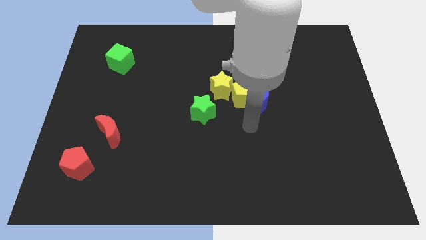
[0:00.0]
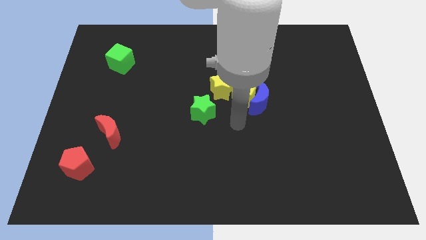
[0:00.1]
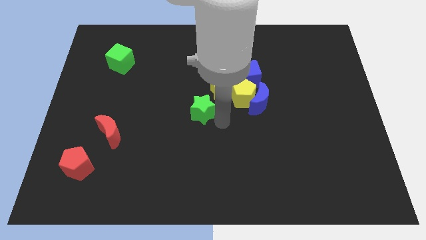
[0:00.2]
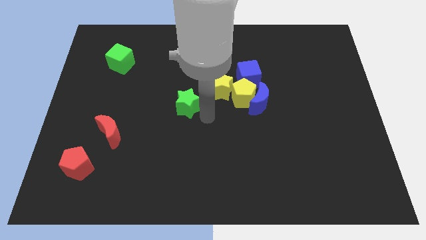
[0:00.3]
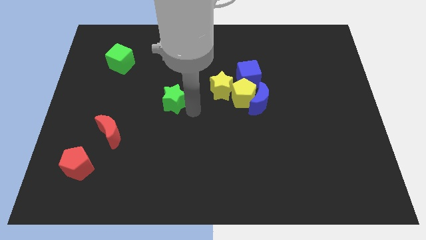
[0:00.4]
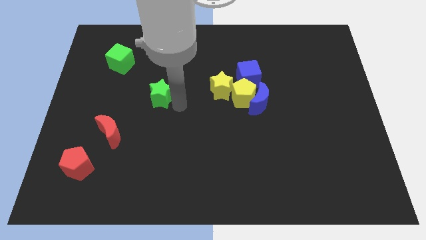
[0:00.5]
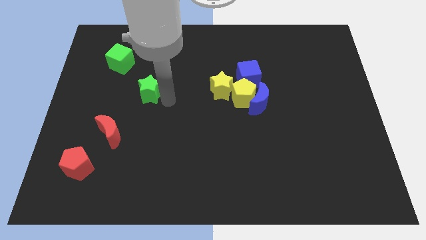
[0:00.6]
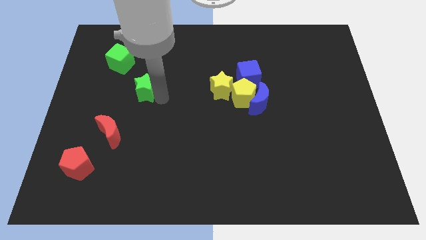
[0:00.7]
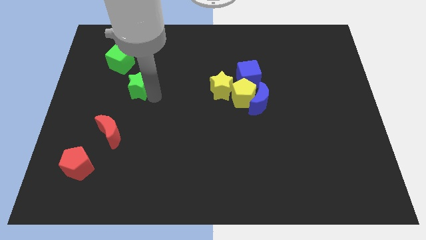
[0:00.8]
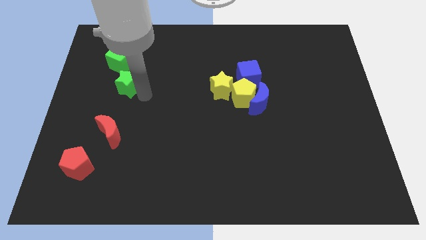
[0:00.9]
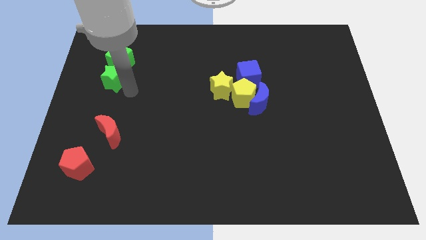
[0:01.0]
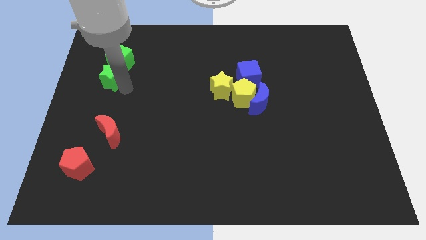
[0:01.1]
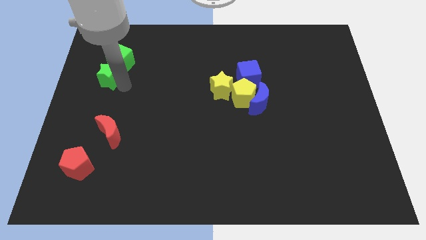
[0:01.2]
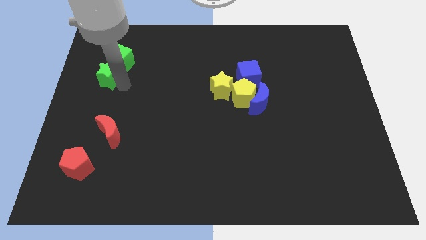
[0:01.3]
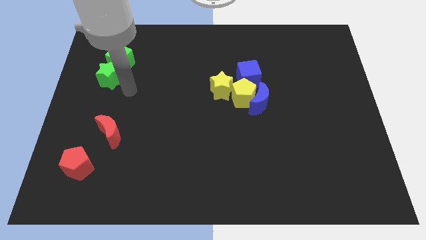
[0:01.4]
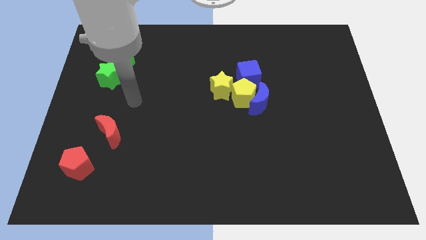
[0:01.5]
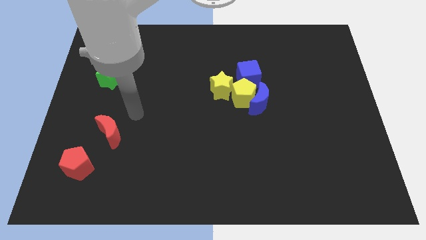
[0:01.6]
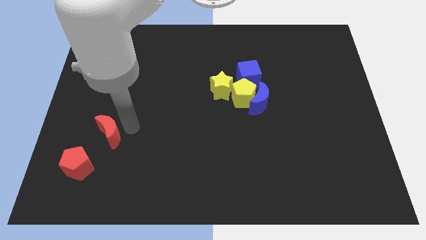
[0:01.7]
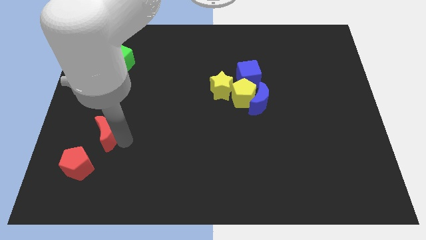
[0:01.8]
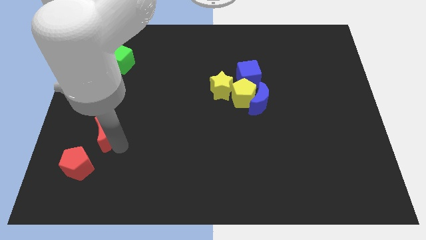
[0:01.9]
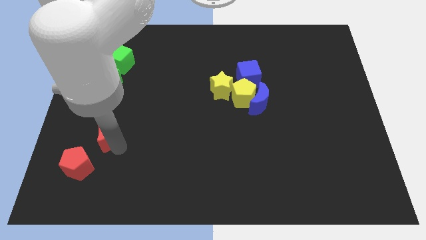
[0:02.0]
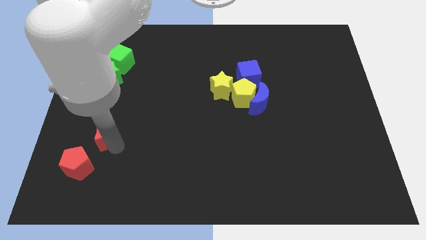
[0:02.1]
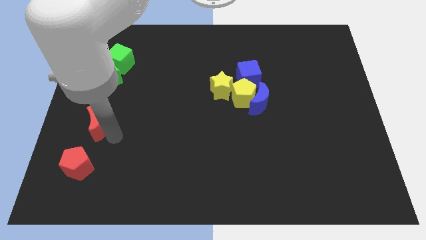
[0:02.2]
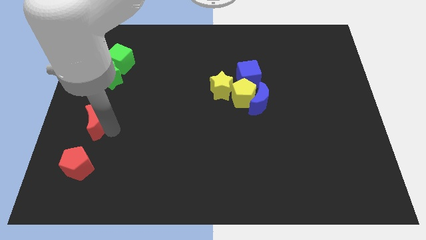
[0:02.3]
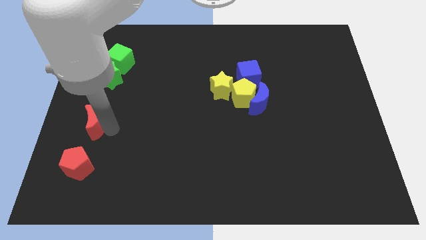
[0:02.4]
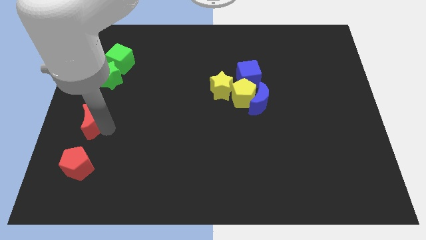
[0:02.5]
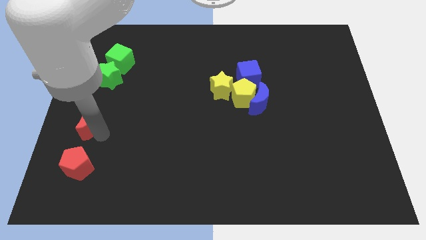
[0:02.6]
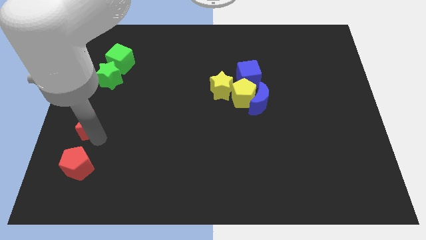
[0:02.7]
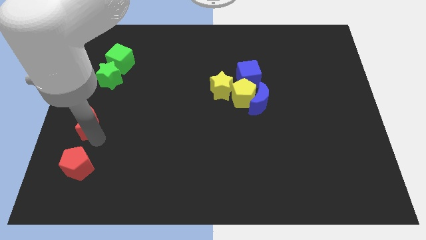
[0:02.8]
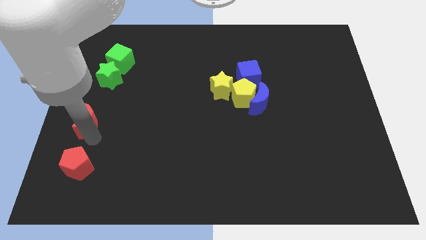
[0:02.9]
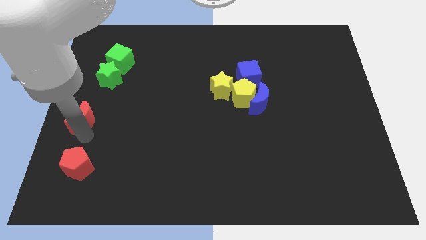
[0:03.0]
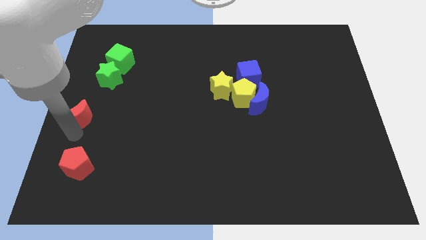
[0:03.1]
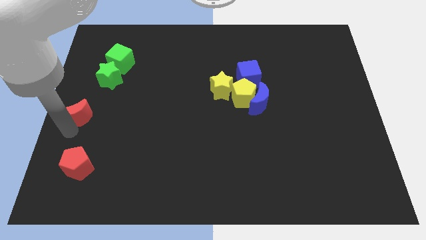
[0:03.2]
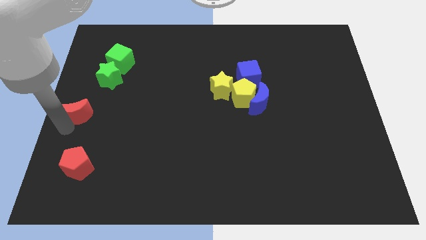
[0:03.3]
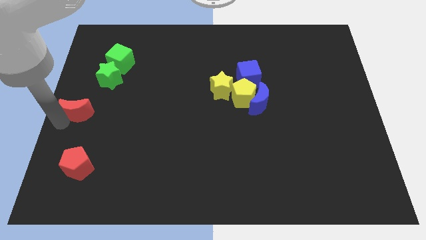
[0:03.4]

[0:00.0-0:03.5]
move the green star and red moon diagonally on the bottom left side of the green cube

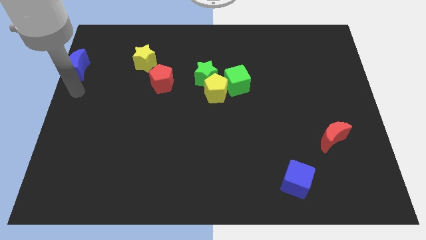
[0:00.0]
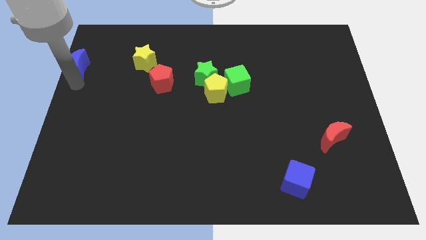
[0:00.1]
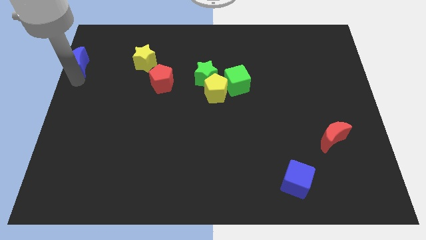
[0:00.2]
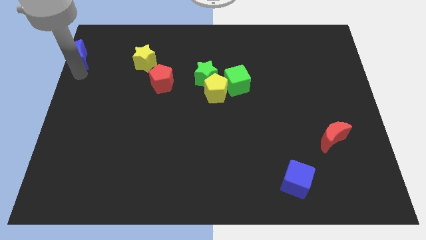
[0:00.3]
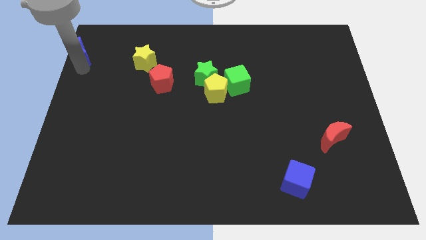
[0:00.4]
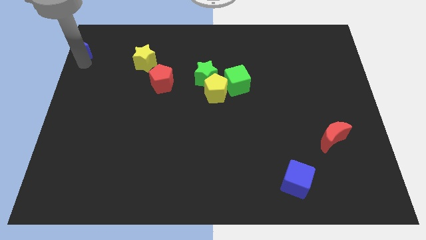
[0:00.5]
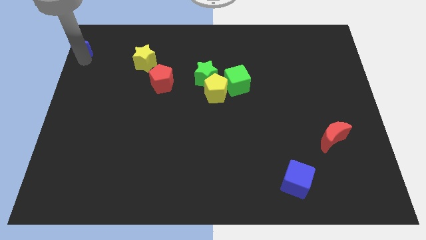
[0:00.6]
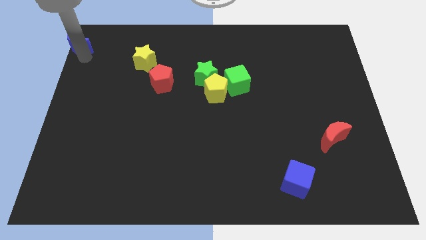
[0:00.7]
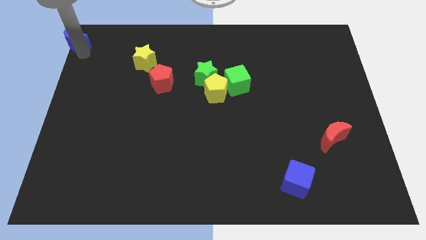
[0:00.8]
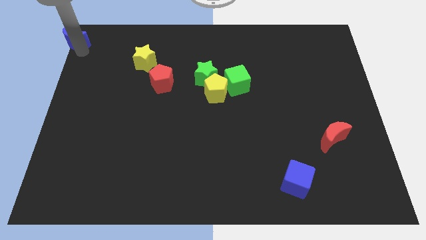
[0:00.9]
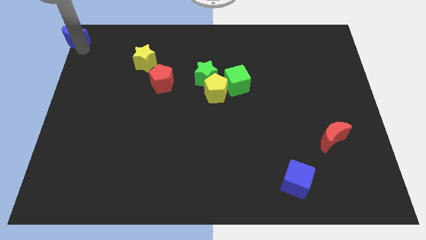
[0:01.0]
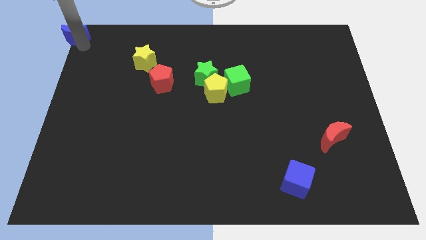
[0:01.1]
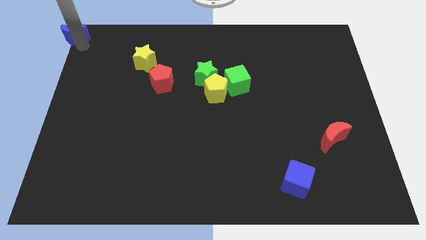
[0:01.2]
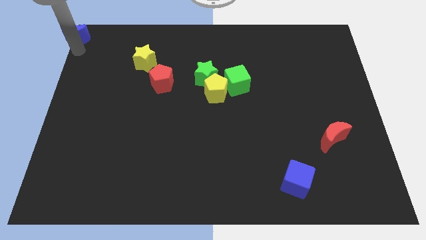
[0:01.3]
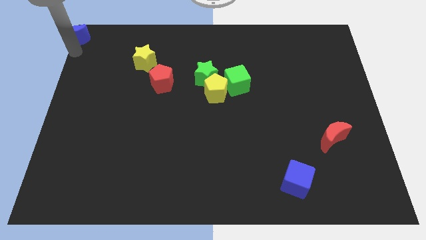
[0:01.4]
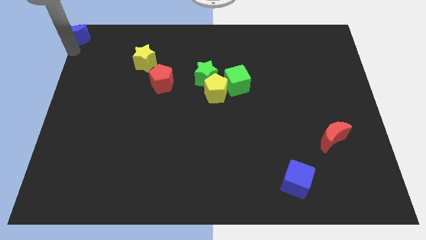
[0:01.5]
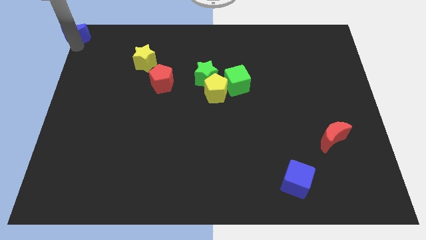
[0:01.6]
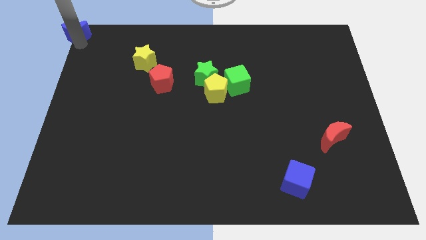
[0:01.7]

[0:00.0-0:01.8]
move the blue moon to the top left corner of the board

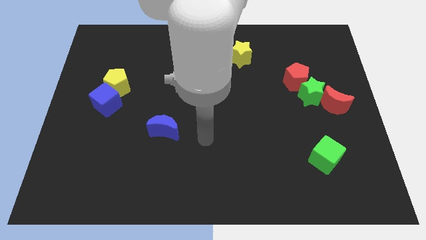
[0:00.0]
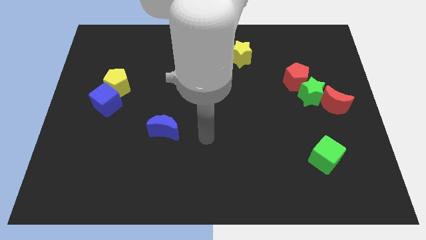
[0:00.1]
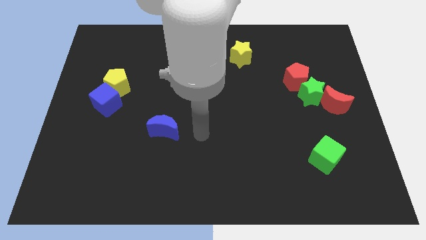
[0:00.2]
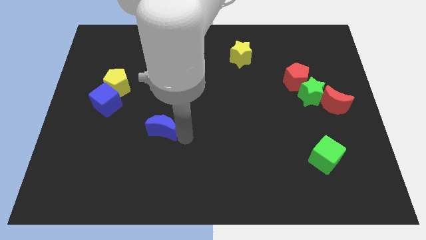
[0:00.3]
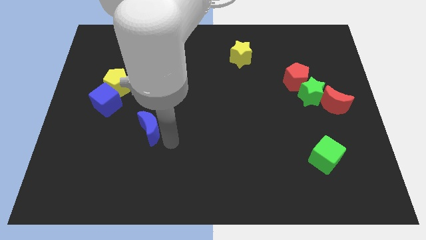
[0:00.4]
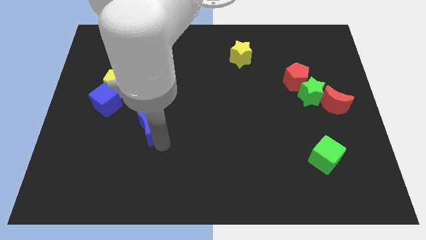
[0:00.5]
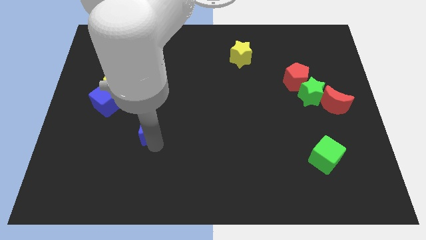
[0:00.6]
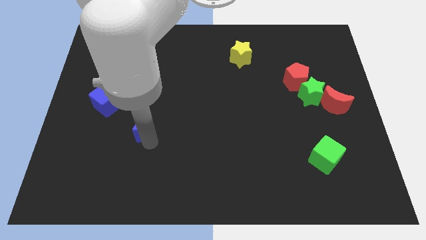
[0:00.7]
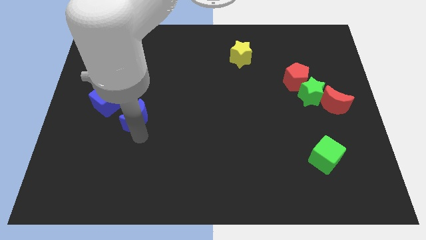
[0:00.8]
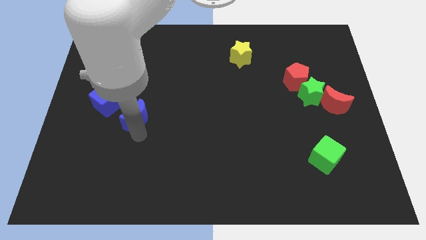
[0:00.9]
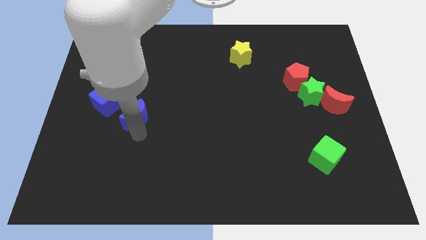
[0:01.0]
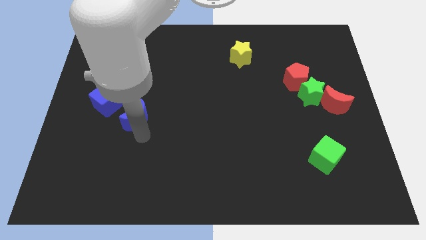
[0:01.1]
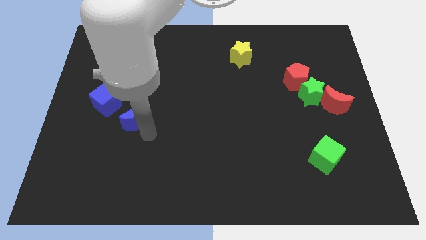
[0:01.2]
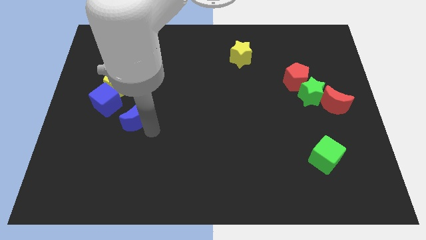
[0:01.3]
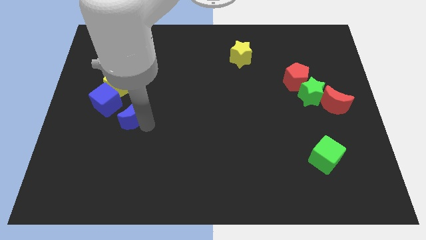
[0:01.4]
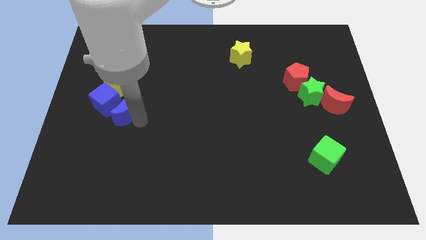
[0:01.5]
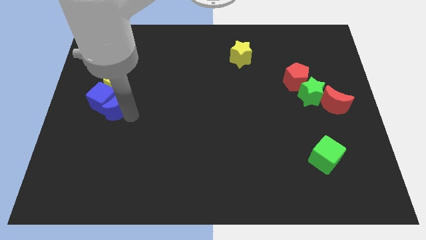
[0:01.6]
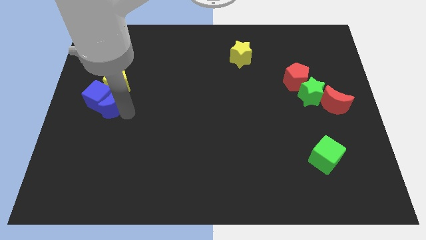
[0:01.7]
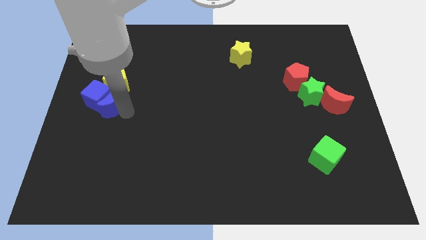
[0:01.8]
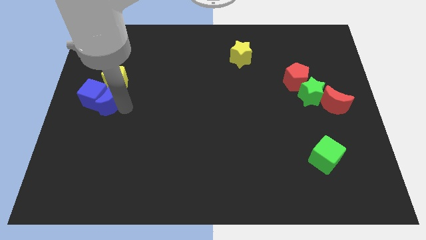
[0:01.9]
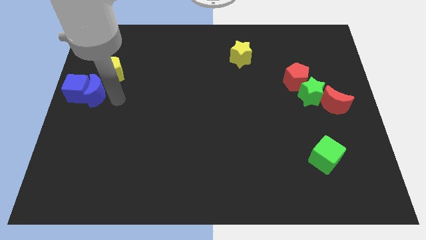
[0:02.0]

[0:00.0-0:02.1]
slide blue moon into blue cube

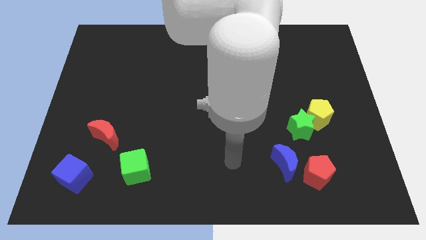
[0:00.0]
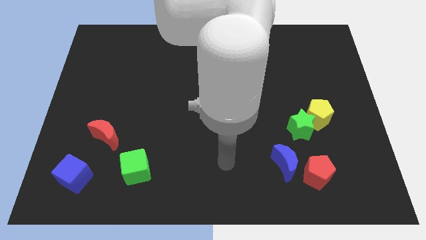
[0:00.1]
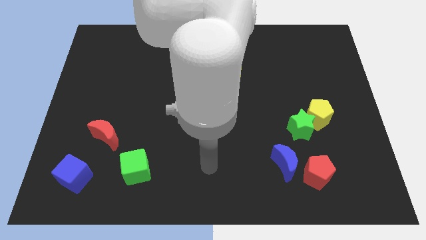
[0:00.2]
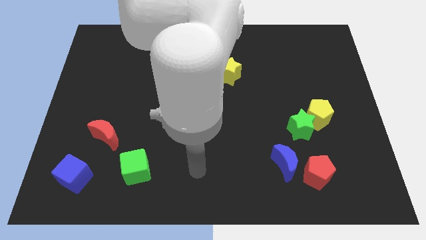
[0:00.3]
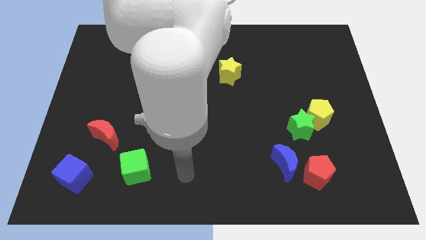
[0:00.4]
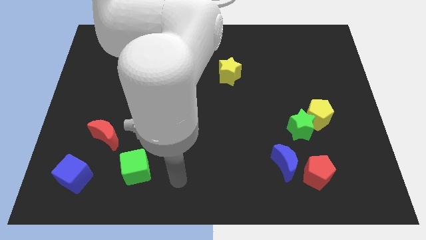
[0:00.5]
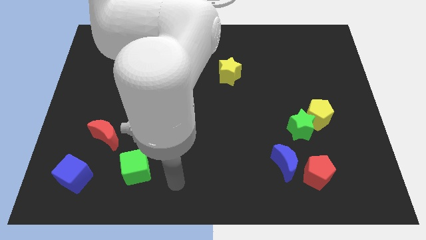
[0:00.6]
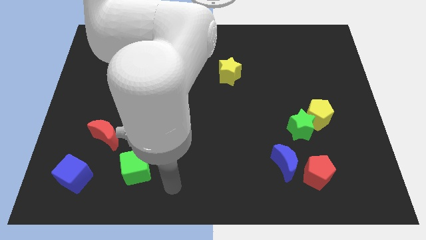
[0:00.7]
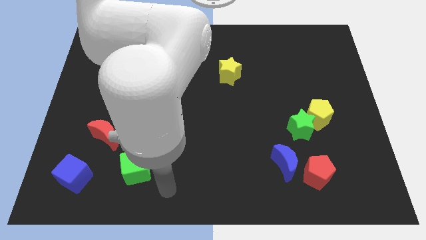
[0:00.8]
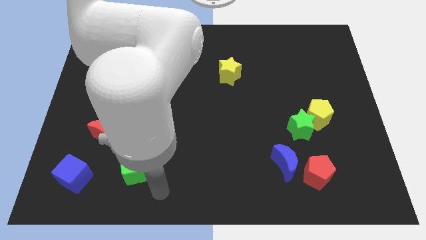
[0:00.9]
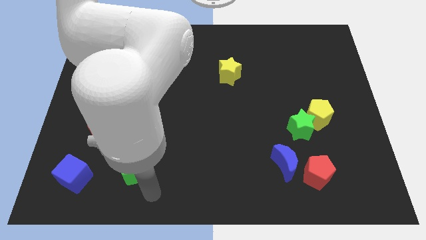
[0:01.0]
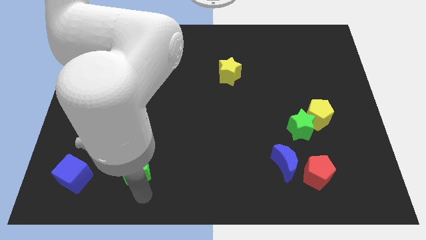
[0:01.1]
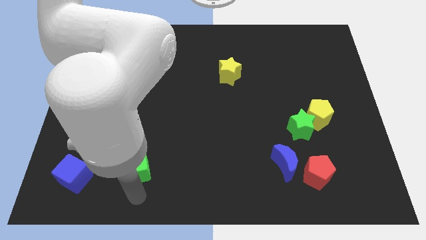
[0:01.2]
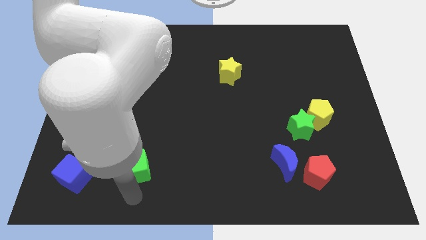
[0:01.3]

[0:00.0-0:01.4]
point your arm below the green cube

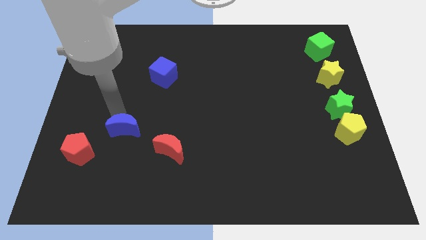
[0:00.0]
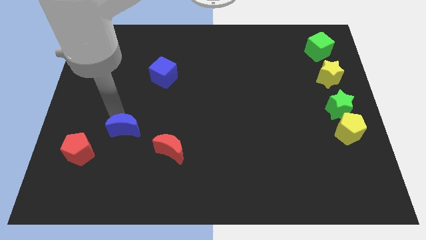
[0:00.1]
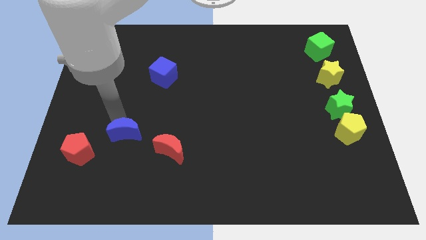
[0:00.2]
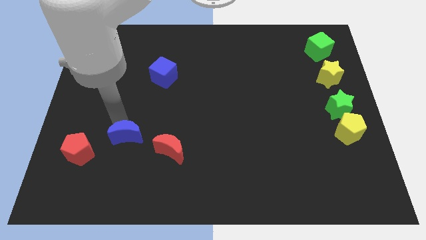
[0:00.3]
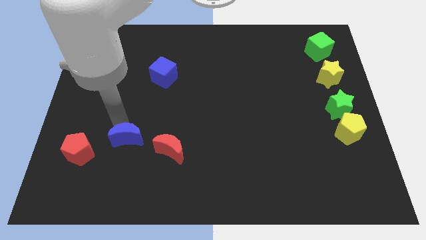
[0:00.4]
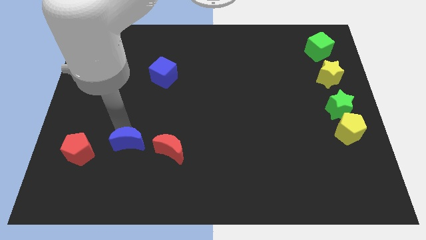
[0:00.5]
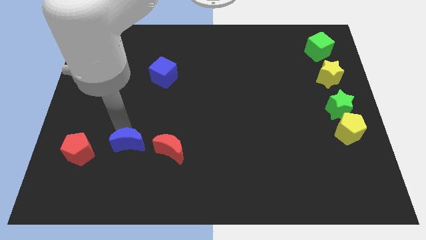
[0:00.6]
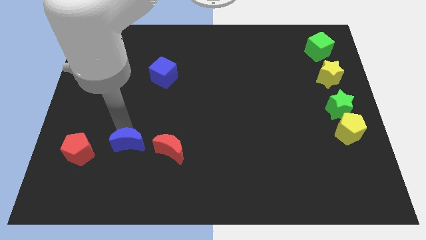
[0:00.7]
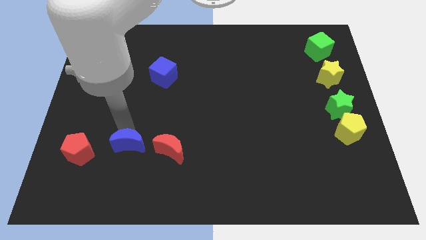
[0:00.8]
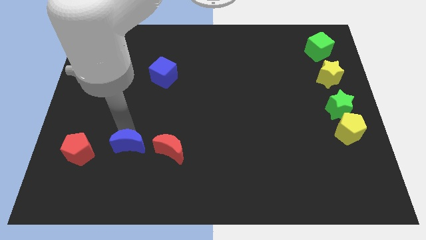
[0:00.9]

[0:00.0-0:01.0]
place the blue crescent to the left of the red crescent
